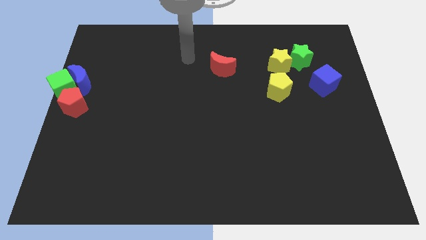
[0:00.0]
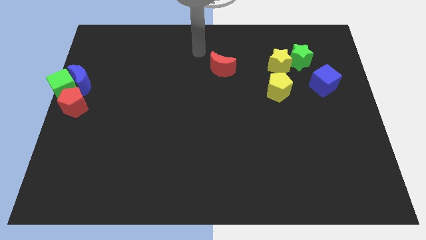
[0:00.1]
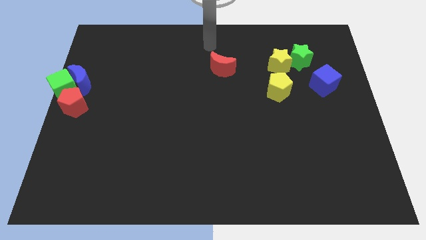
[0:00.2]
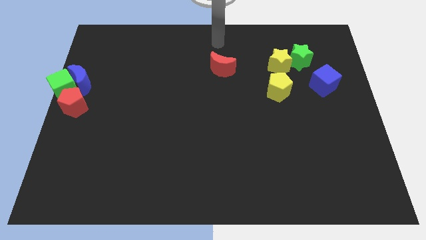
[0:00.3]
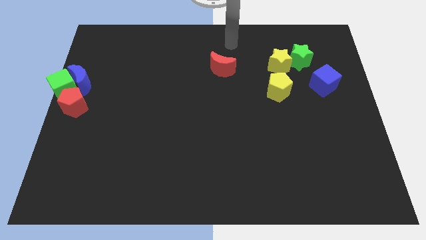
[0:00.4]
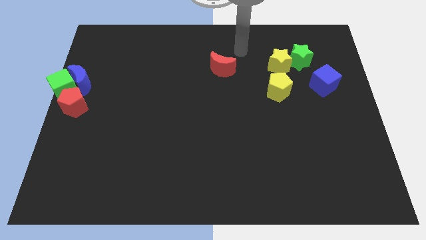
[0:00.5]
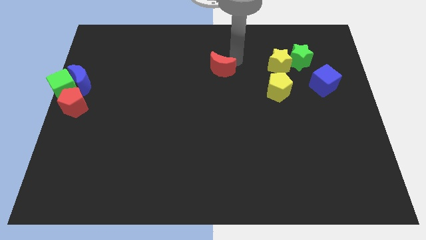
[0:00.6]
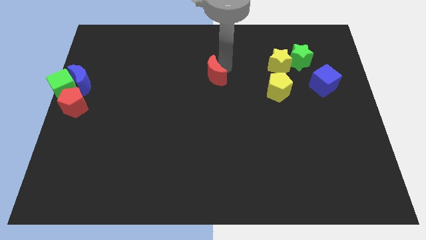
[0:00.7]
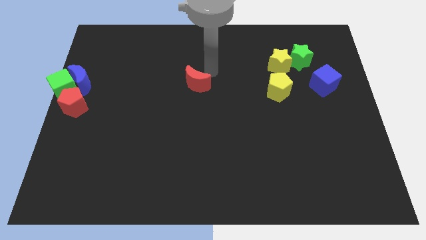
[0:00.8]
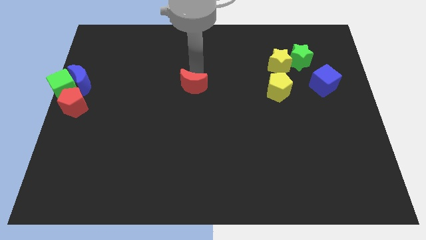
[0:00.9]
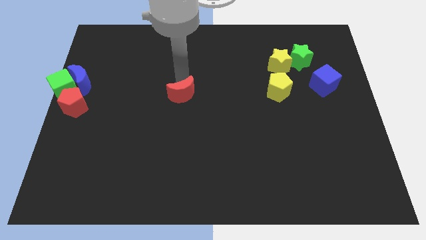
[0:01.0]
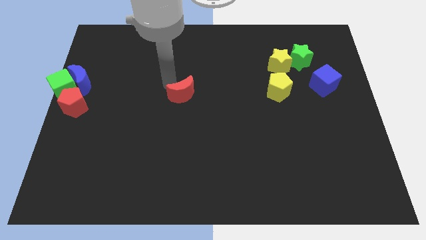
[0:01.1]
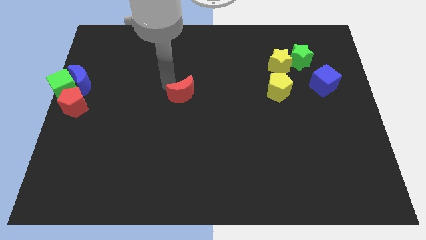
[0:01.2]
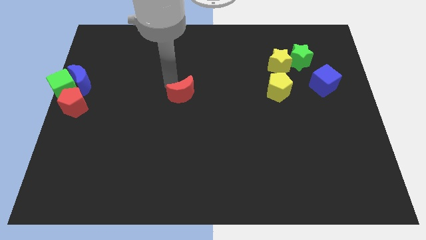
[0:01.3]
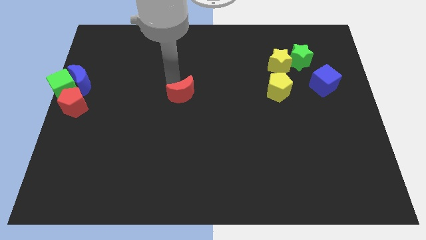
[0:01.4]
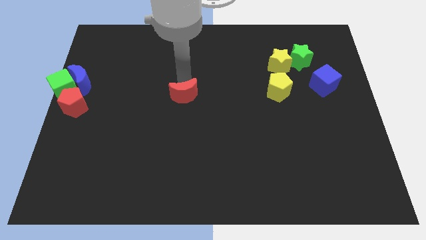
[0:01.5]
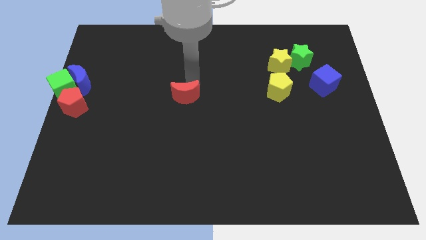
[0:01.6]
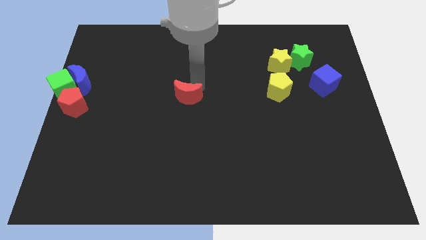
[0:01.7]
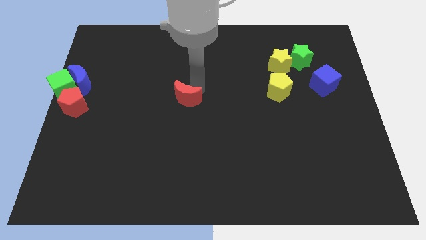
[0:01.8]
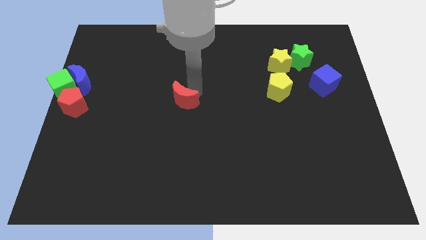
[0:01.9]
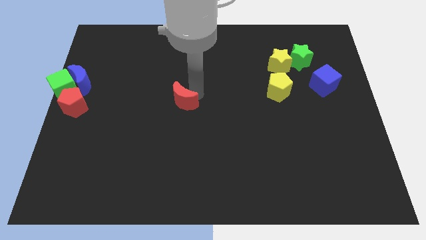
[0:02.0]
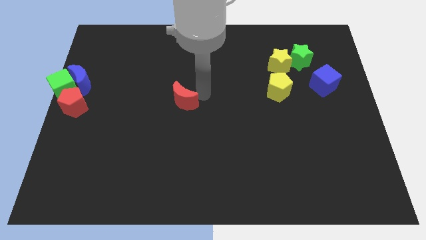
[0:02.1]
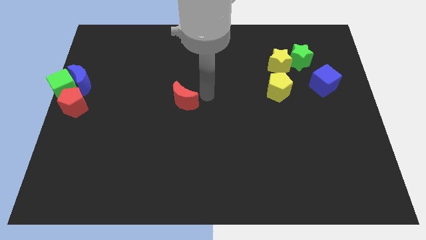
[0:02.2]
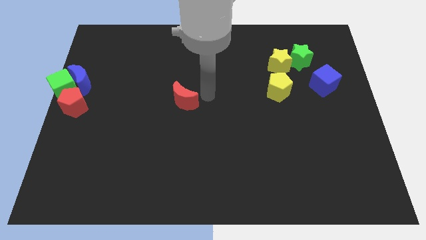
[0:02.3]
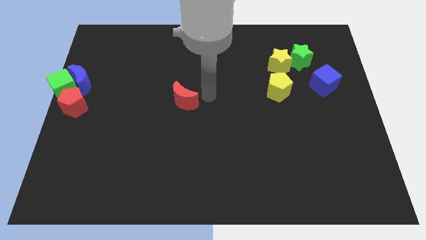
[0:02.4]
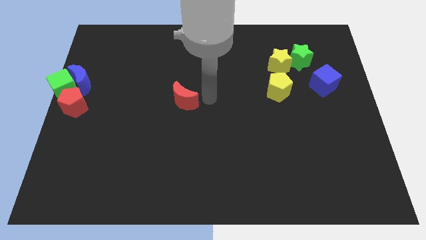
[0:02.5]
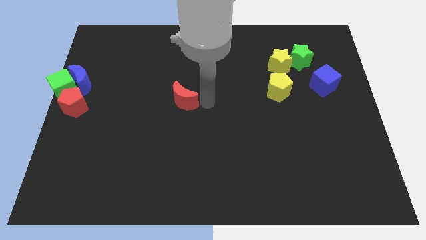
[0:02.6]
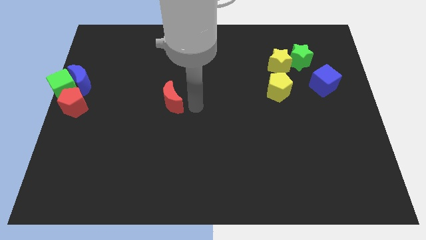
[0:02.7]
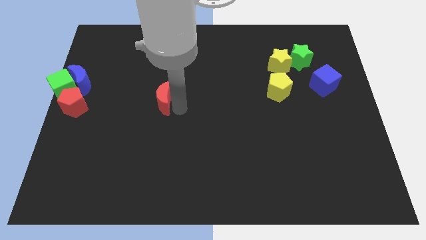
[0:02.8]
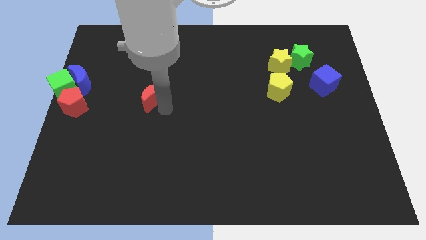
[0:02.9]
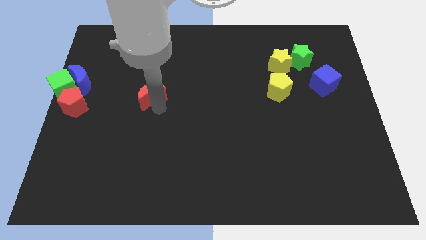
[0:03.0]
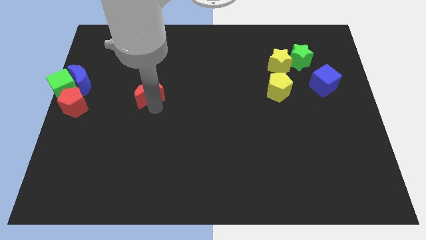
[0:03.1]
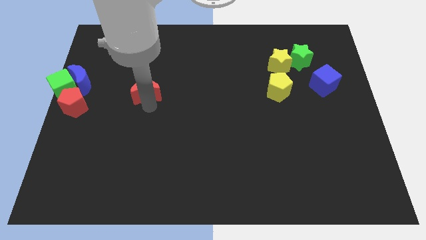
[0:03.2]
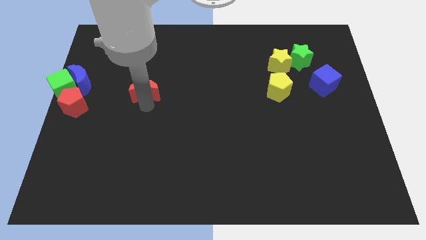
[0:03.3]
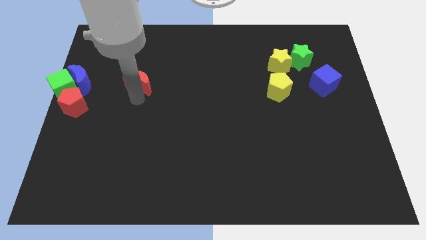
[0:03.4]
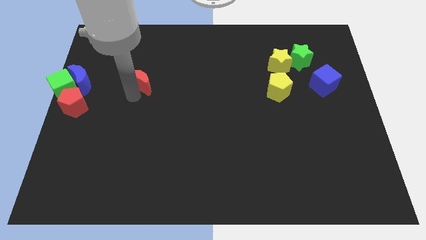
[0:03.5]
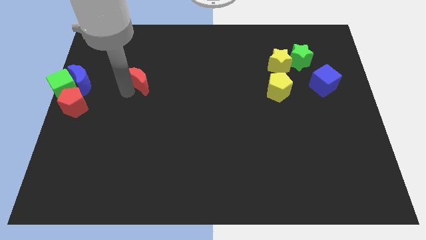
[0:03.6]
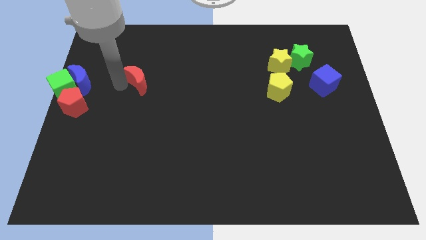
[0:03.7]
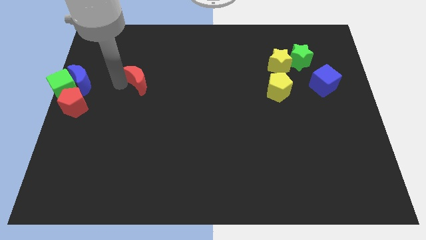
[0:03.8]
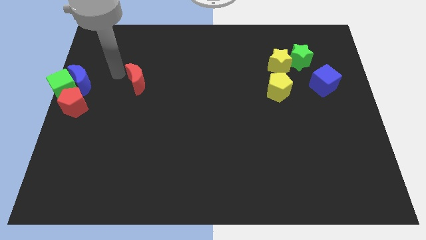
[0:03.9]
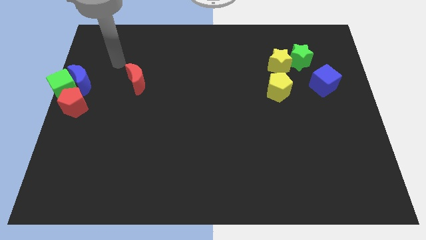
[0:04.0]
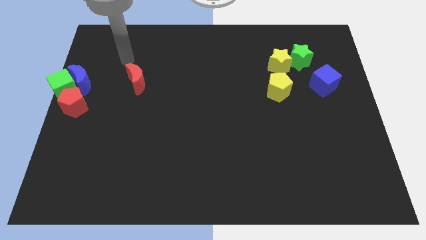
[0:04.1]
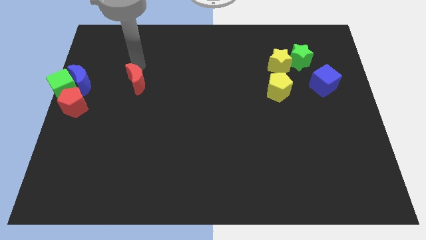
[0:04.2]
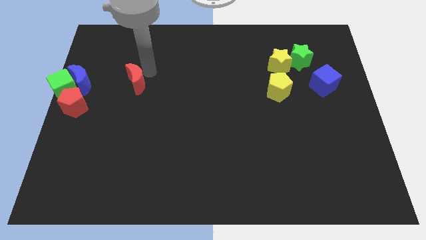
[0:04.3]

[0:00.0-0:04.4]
move the red moon towards the left

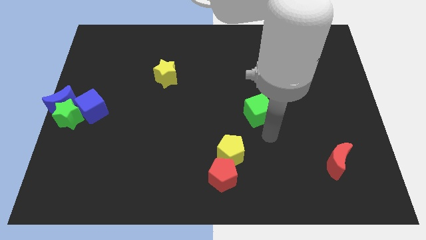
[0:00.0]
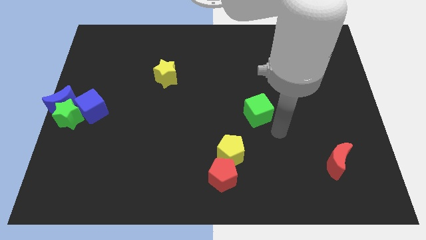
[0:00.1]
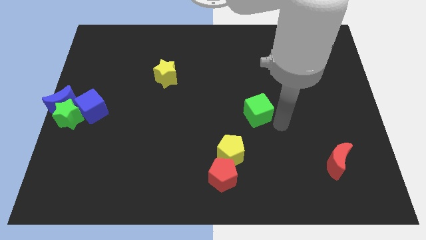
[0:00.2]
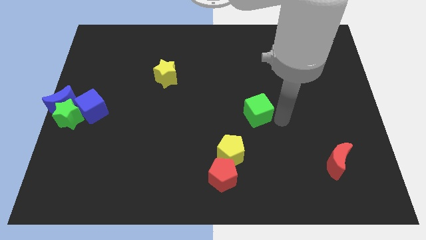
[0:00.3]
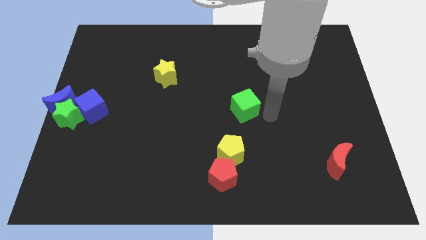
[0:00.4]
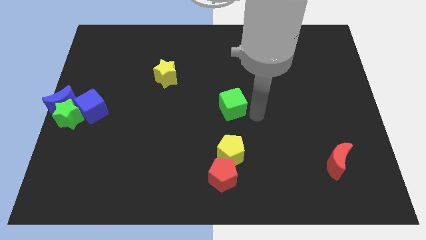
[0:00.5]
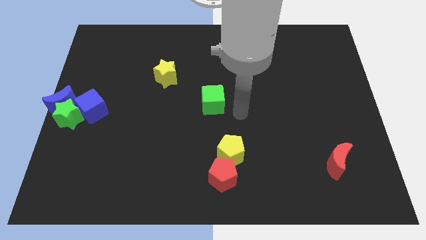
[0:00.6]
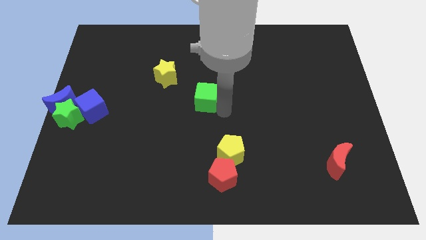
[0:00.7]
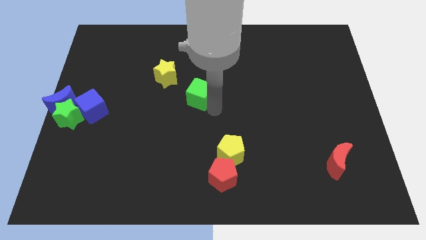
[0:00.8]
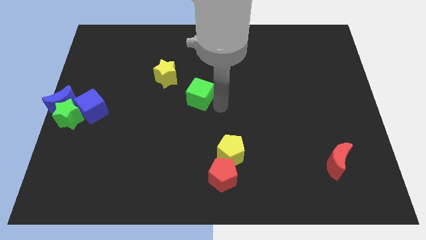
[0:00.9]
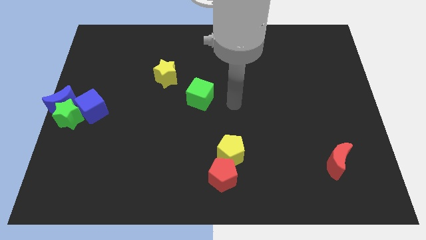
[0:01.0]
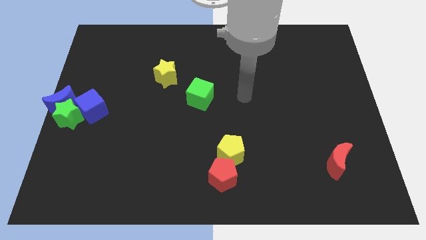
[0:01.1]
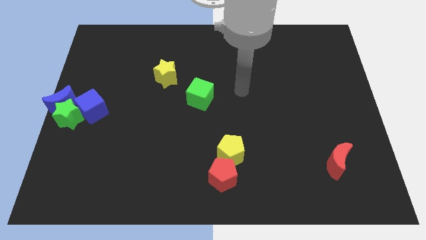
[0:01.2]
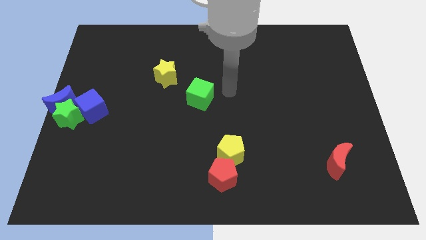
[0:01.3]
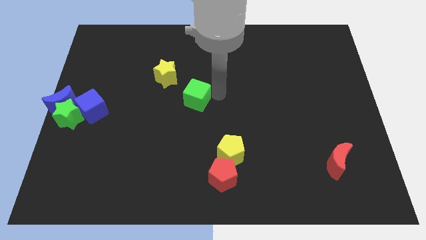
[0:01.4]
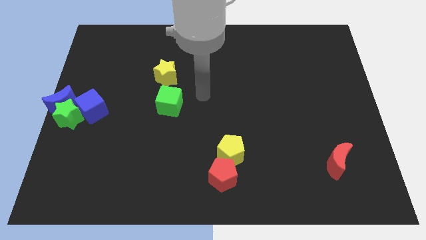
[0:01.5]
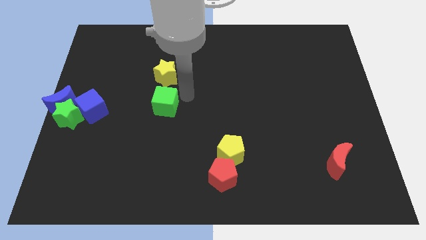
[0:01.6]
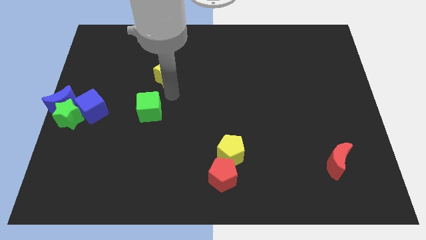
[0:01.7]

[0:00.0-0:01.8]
push the green cube to the bottom of the yellow star

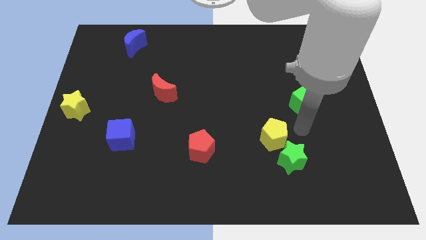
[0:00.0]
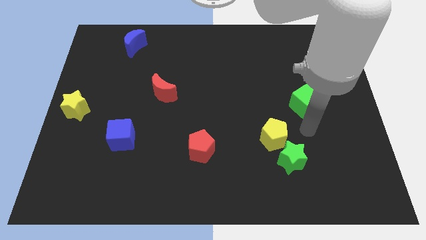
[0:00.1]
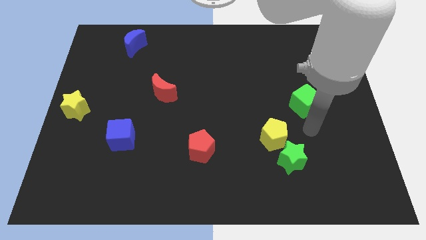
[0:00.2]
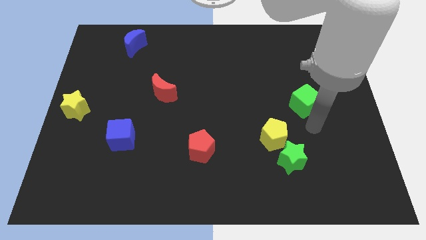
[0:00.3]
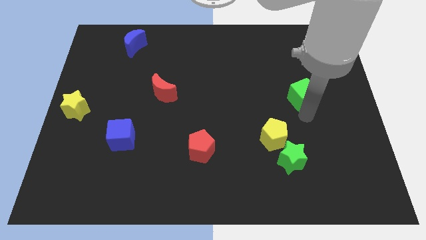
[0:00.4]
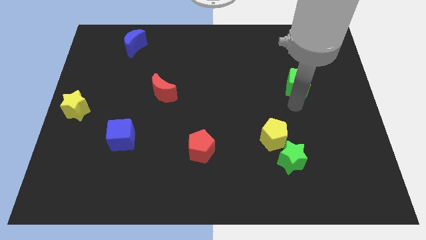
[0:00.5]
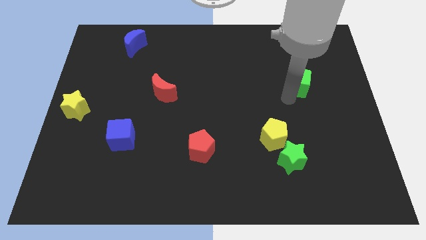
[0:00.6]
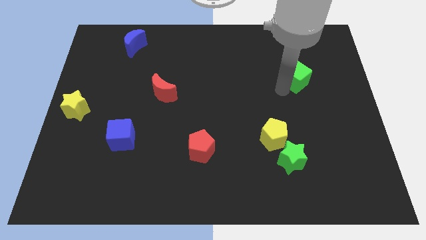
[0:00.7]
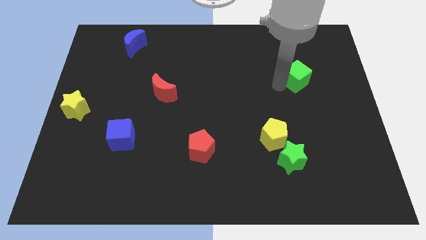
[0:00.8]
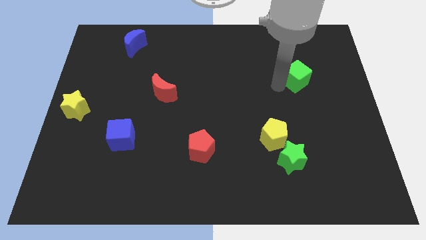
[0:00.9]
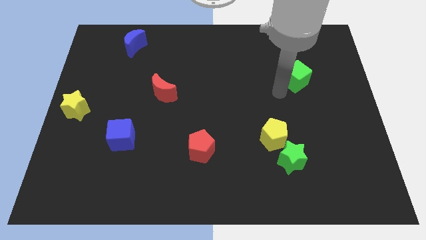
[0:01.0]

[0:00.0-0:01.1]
move green cube slightly up

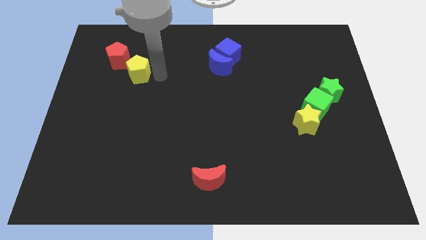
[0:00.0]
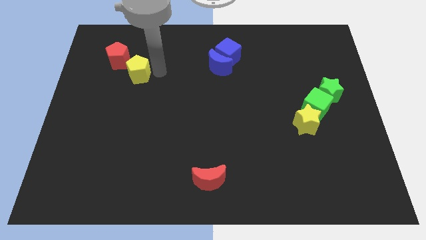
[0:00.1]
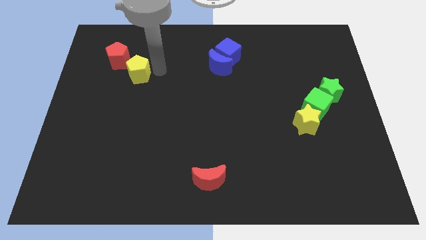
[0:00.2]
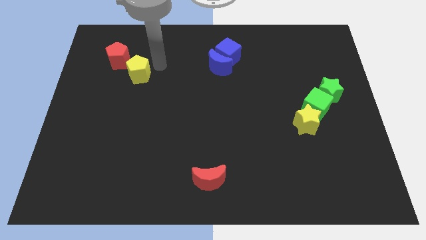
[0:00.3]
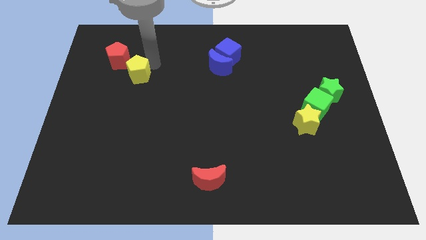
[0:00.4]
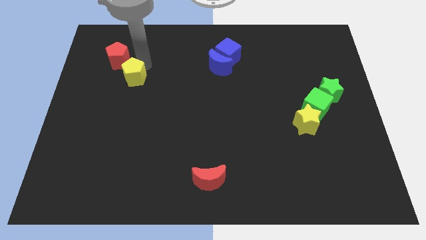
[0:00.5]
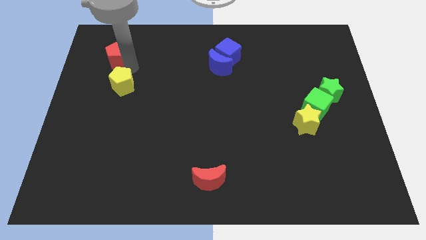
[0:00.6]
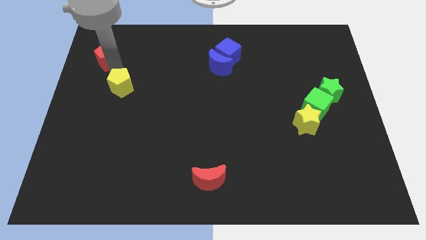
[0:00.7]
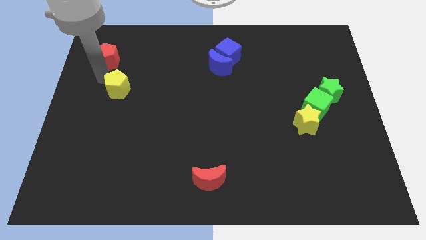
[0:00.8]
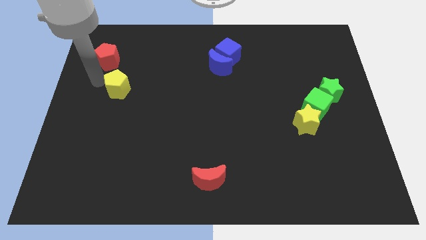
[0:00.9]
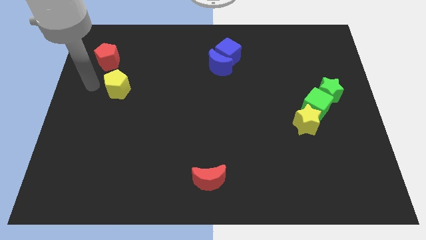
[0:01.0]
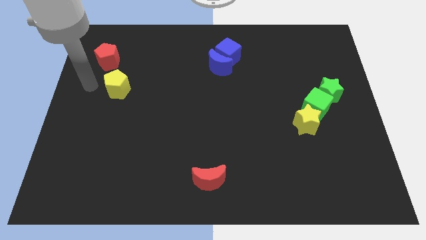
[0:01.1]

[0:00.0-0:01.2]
separate the red pentagon and yellow pentagon

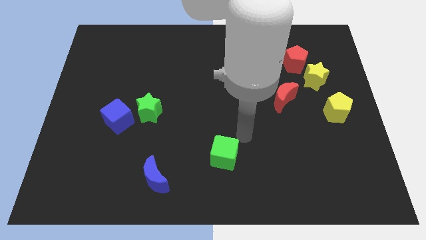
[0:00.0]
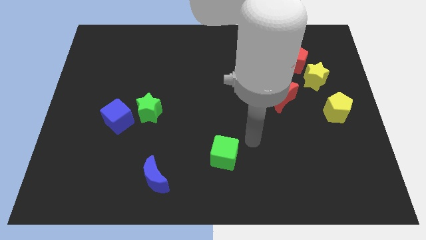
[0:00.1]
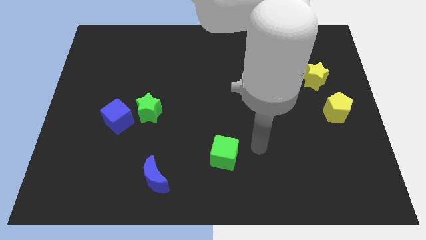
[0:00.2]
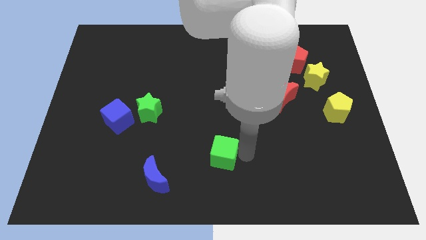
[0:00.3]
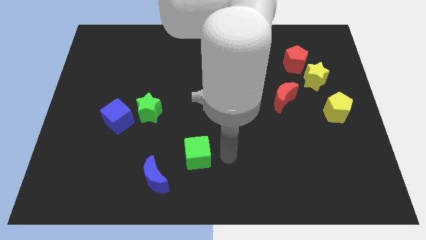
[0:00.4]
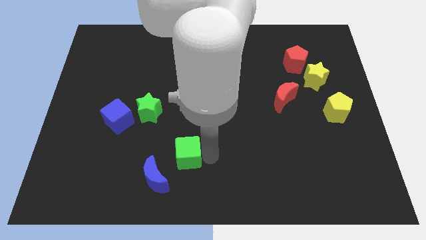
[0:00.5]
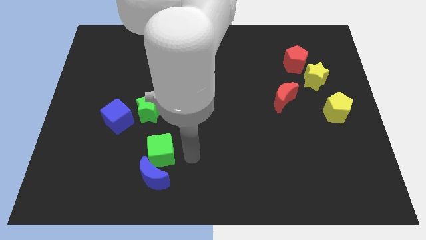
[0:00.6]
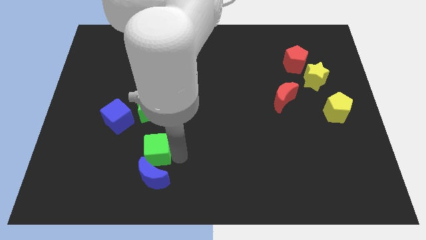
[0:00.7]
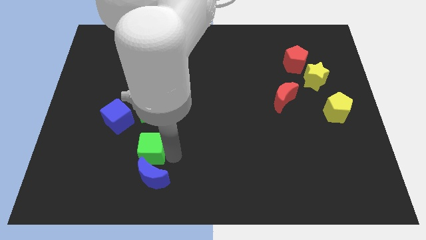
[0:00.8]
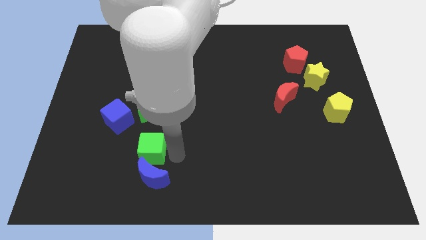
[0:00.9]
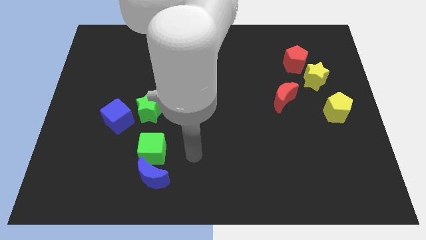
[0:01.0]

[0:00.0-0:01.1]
place the green cube above the blue crescent
